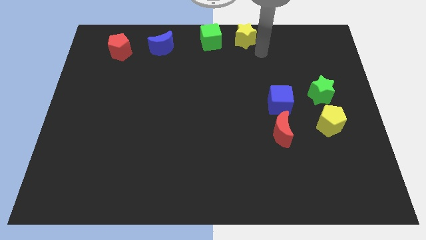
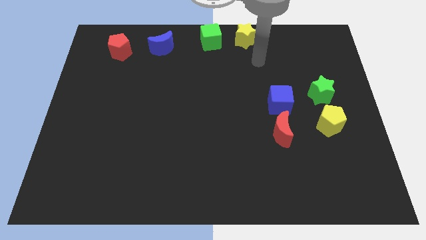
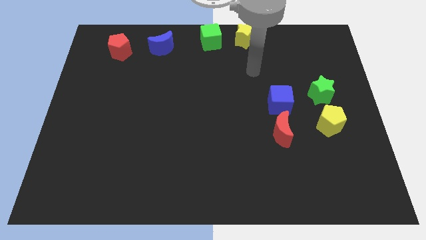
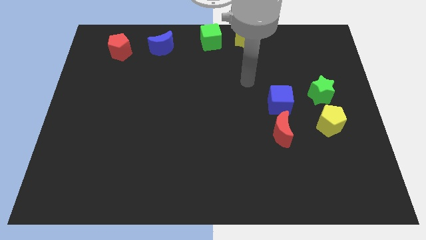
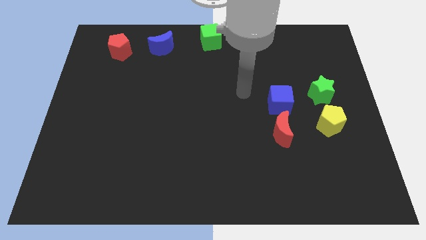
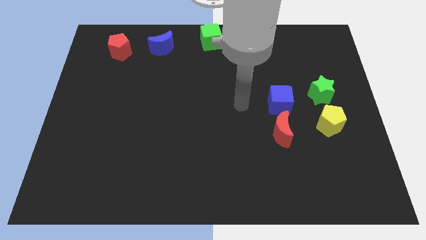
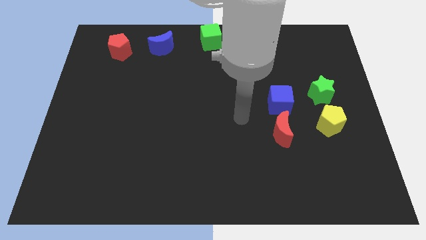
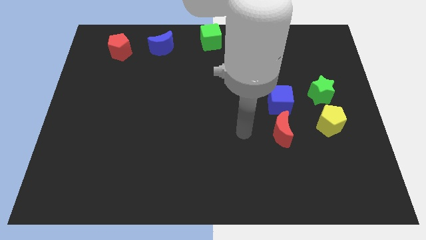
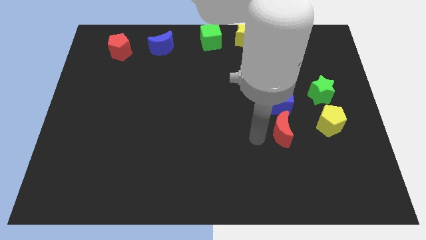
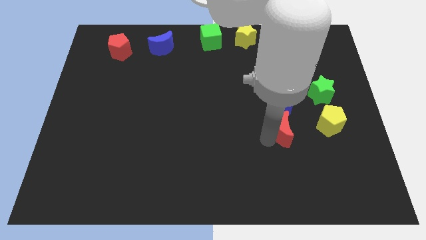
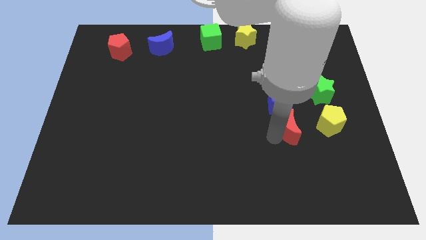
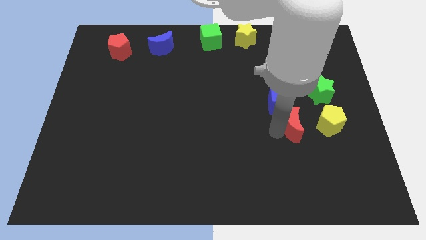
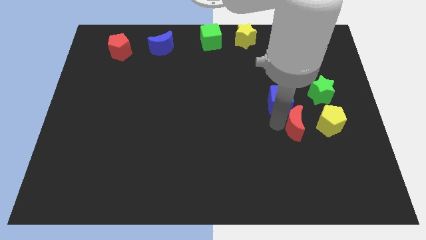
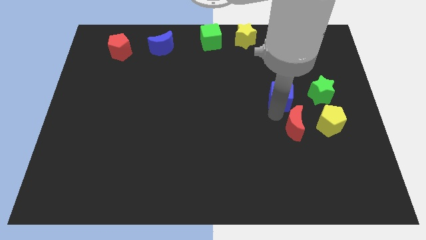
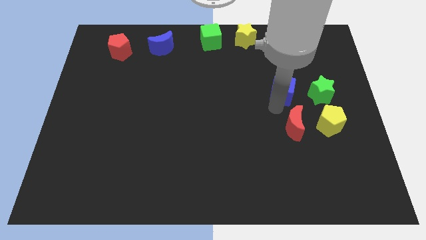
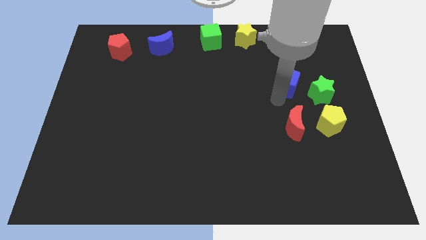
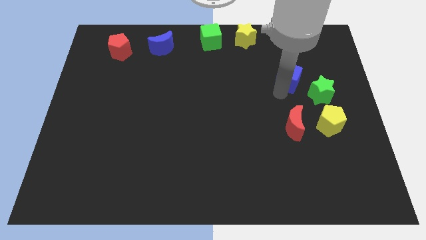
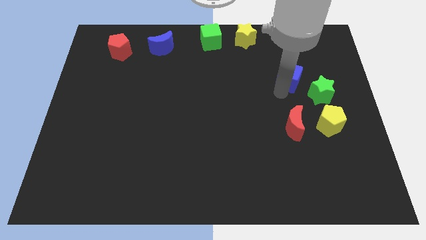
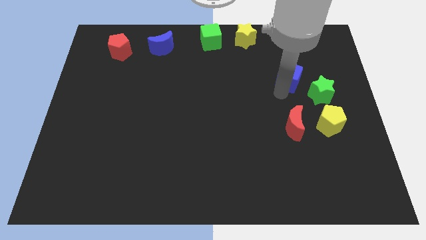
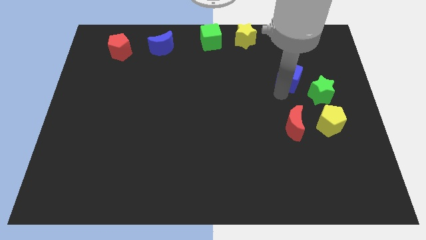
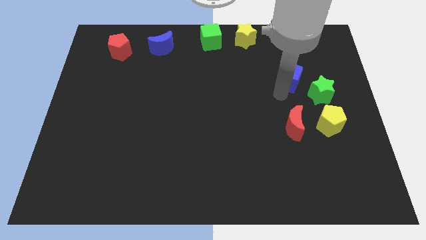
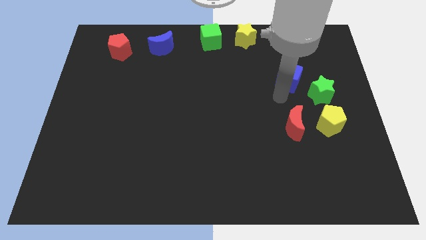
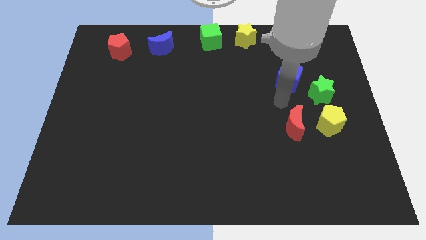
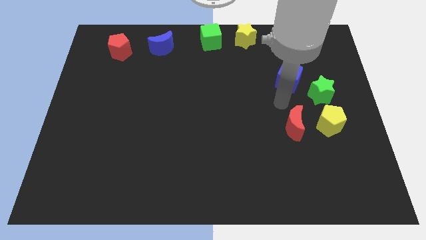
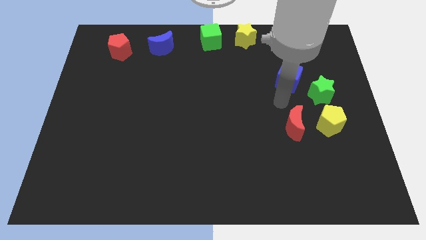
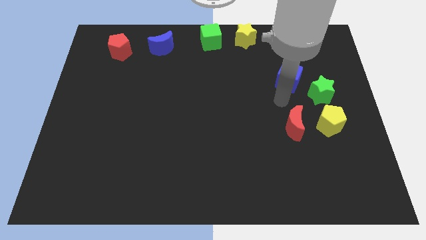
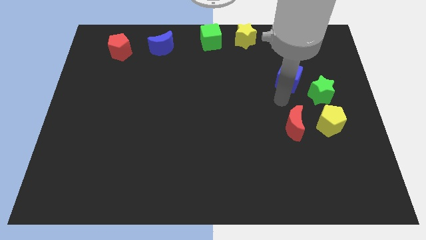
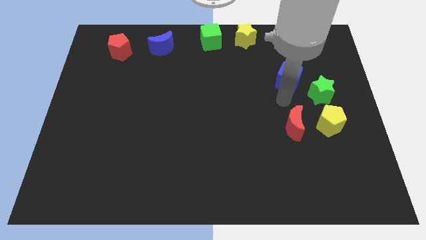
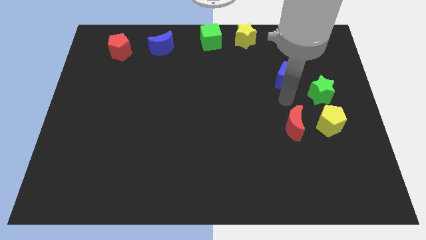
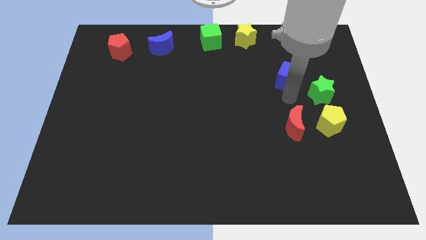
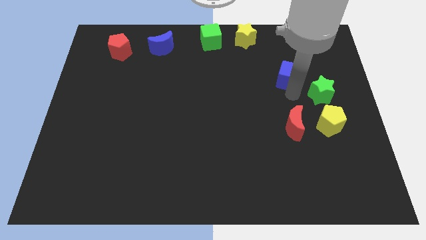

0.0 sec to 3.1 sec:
separate the blue cube from the red crescent

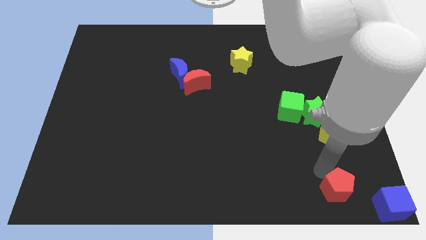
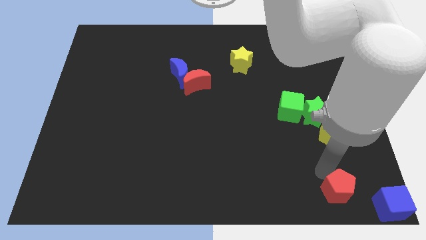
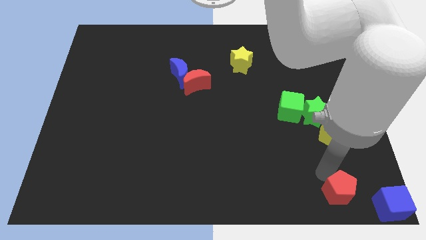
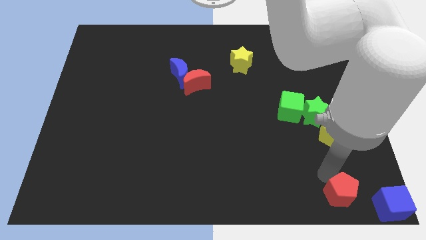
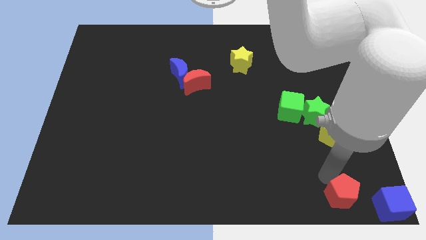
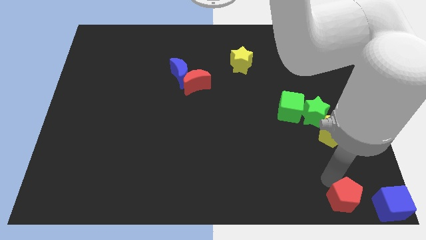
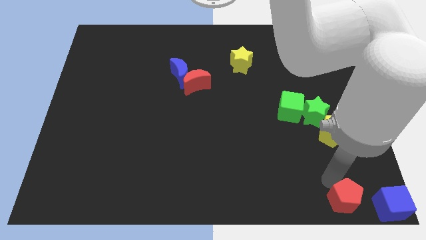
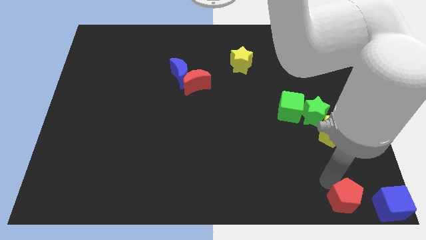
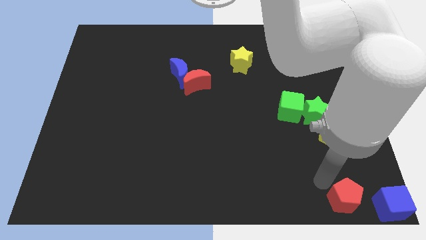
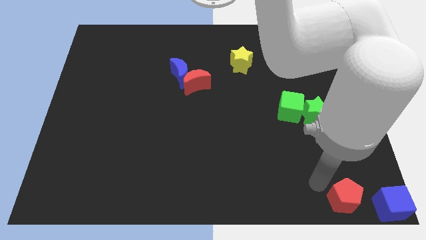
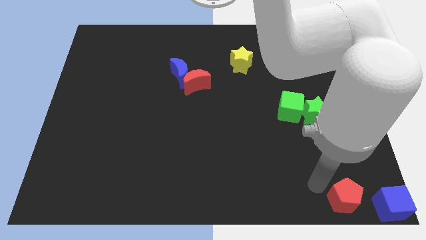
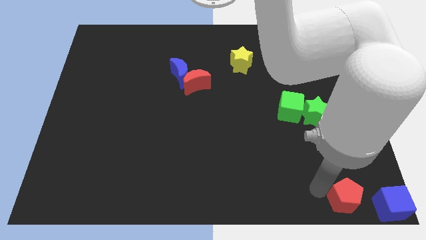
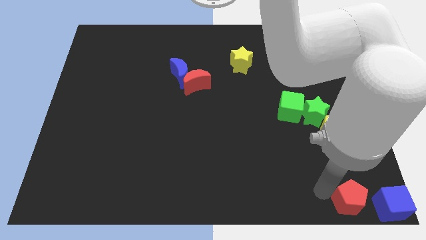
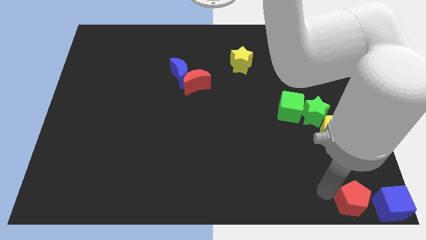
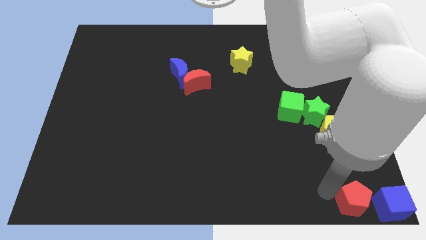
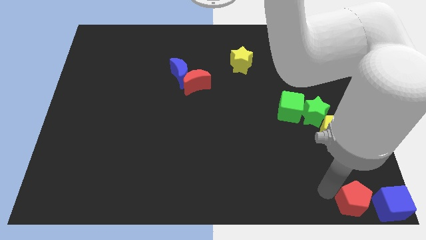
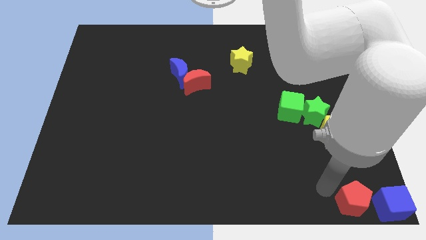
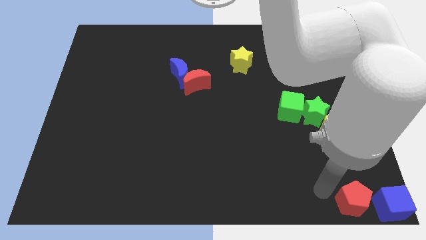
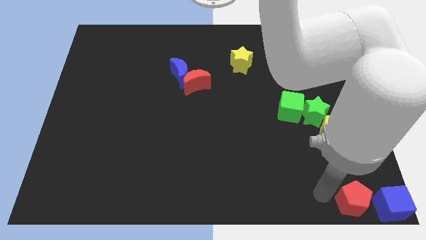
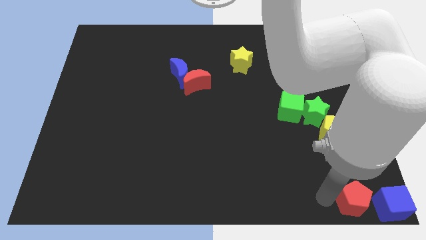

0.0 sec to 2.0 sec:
move the red pentagon to the left of blue cube

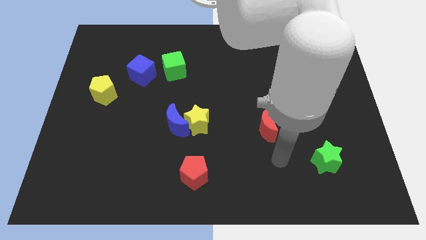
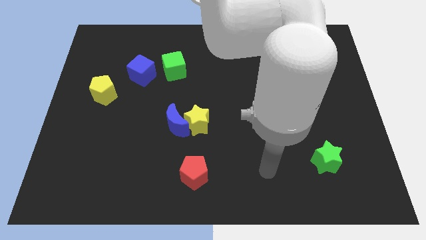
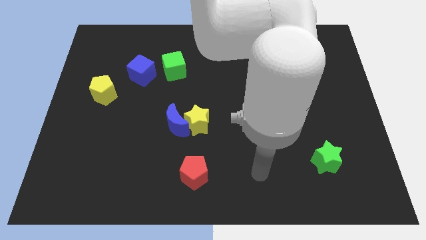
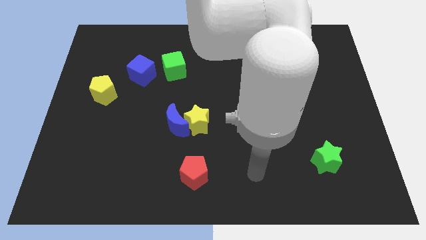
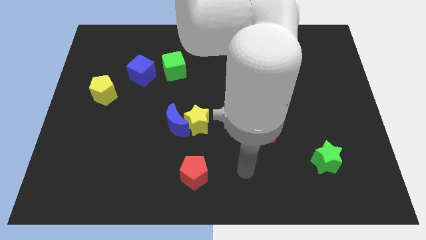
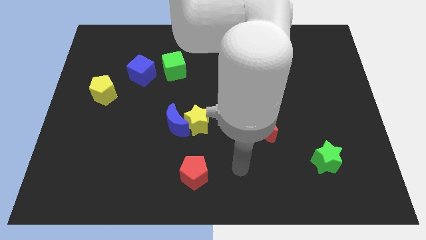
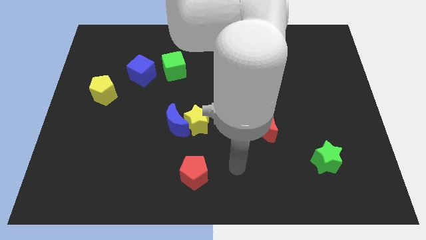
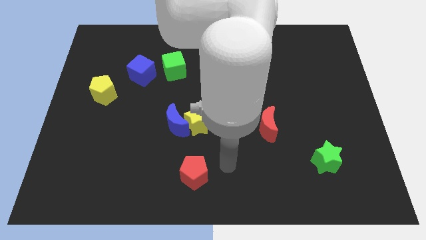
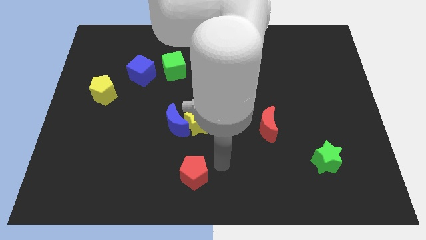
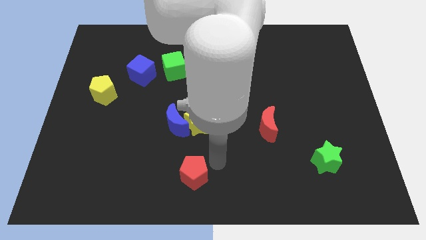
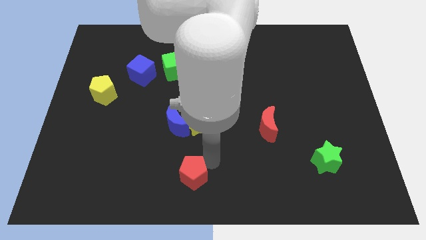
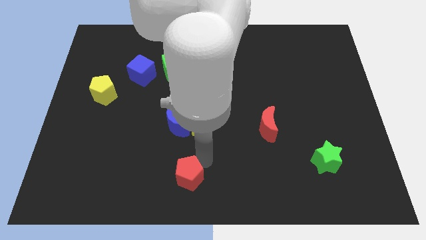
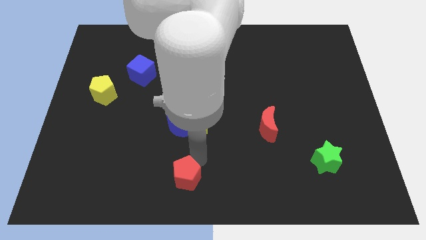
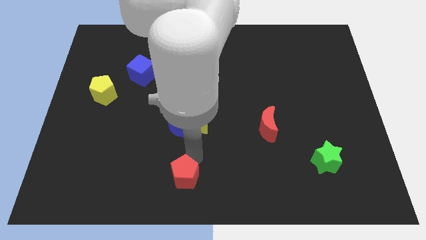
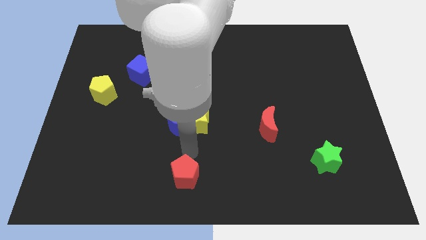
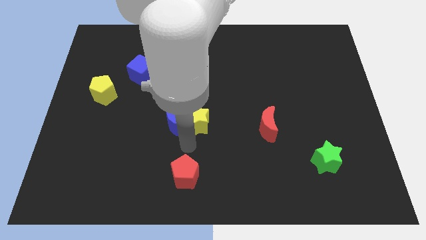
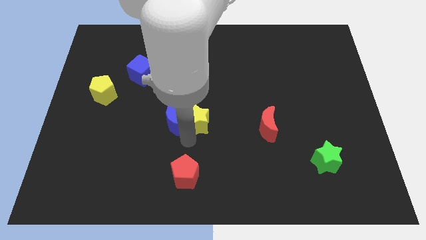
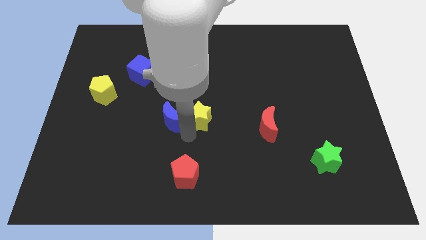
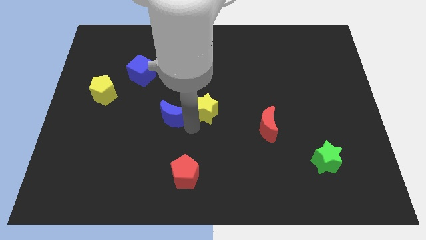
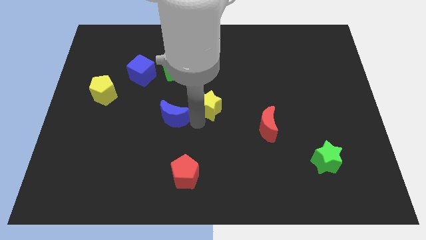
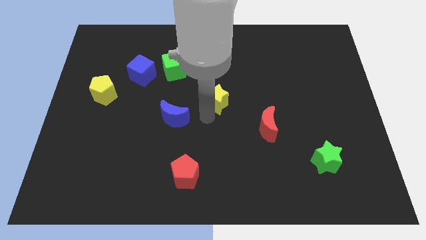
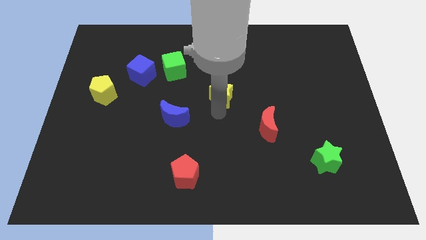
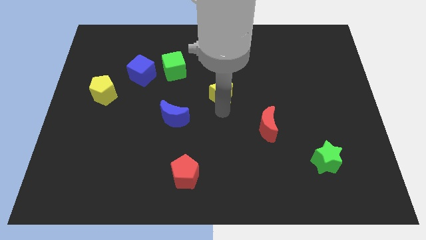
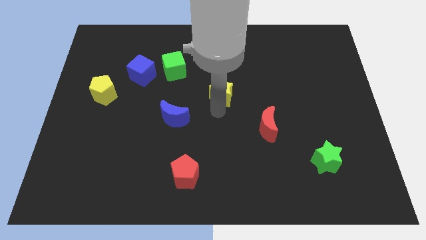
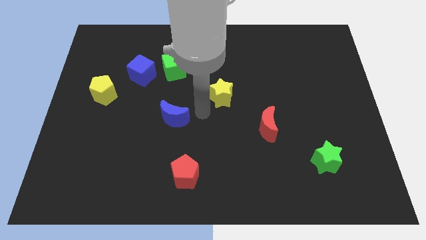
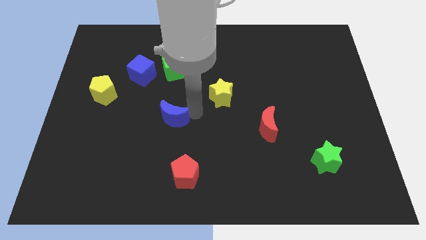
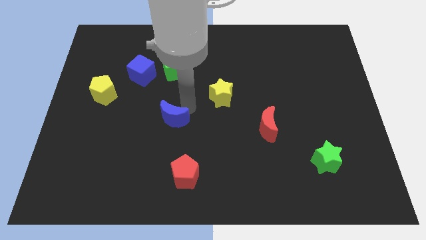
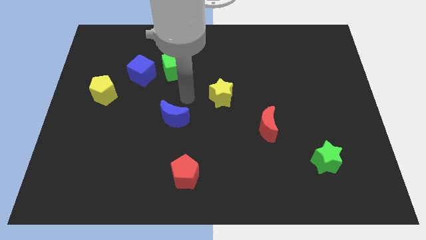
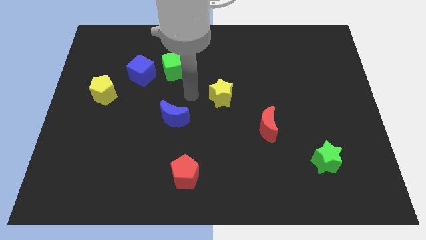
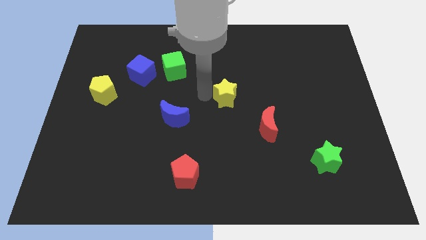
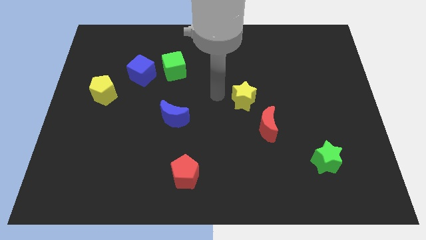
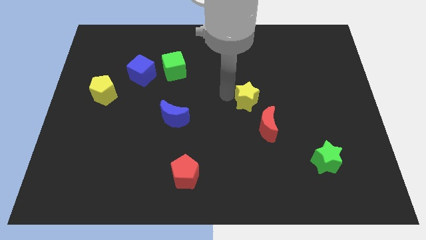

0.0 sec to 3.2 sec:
separate yellow star and the blue moon

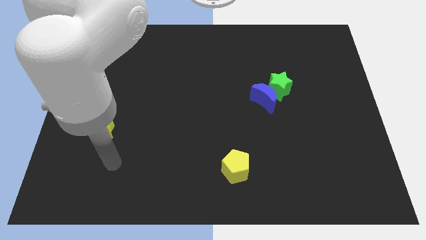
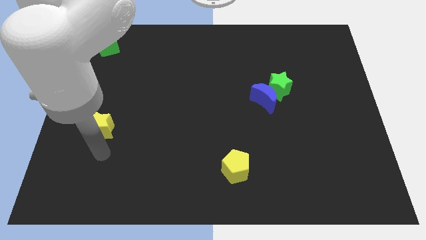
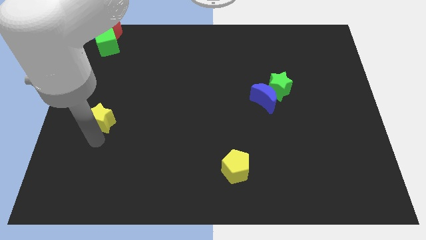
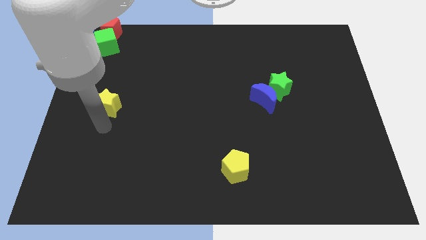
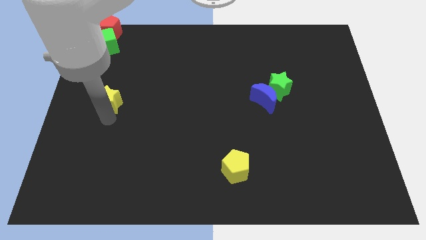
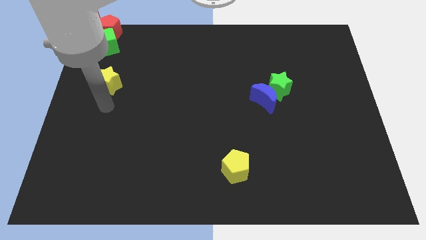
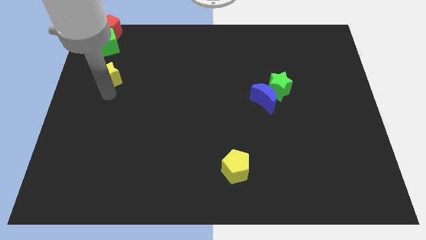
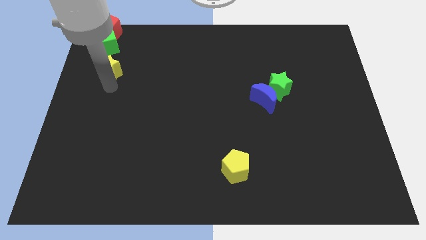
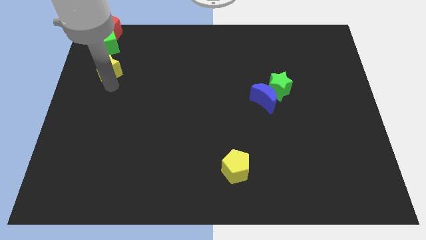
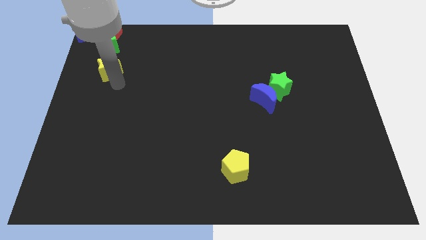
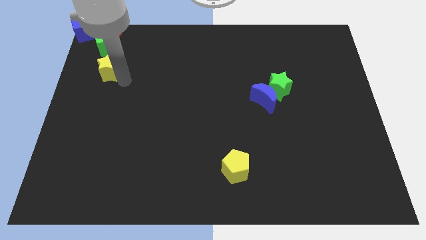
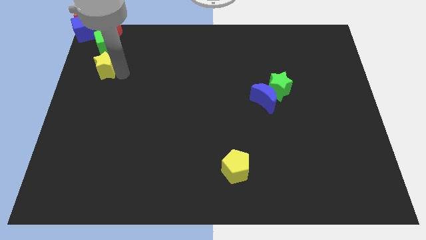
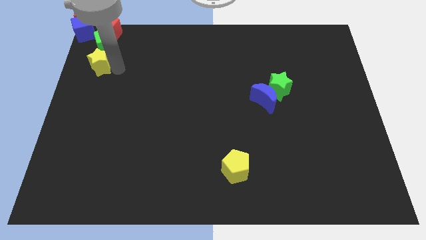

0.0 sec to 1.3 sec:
push the yellow star close to the bottom side of the green cube
